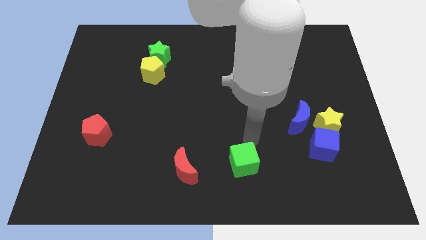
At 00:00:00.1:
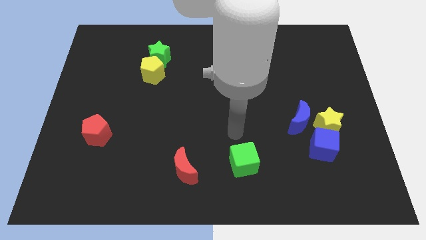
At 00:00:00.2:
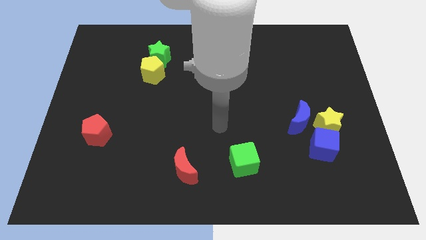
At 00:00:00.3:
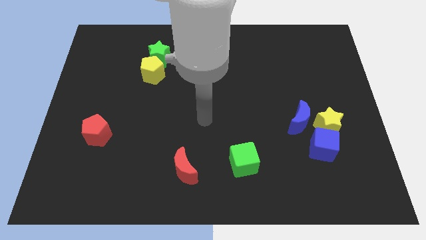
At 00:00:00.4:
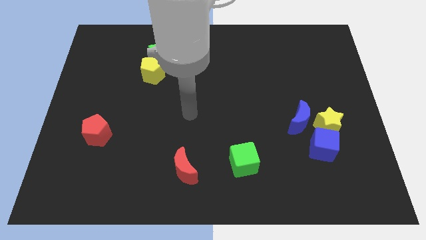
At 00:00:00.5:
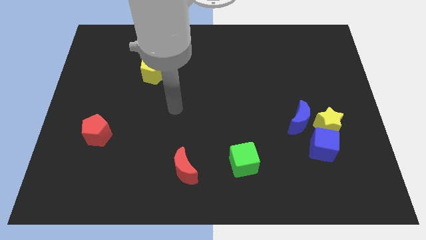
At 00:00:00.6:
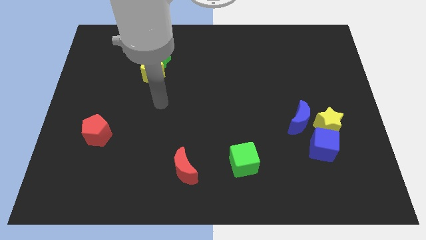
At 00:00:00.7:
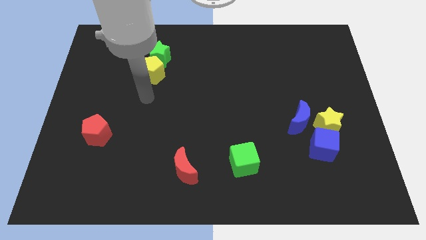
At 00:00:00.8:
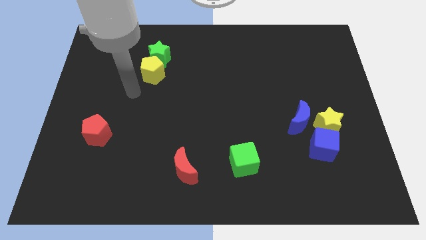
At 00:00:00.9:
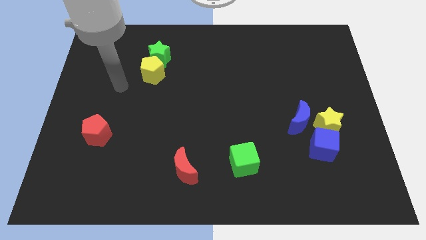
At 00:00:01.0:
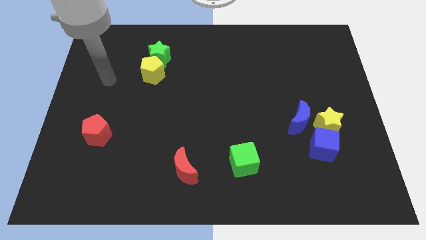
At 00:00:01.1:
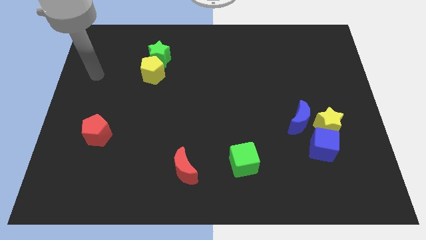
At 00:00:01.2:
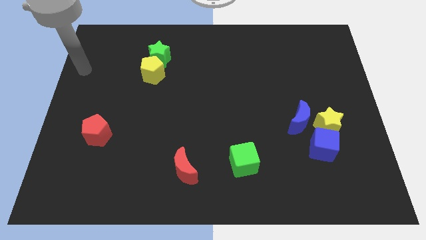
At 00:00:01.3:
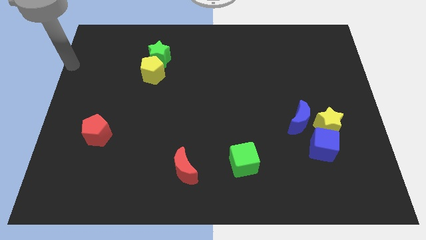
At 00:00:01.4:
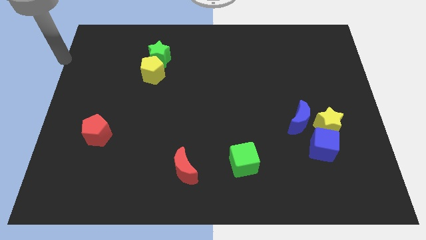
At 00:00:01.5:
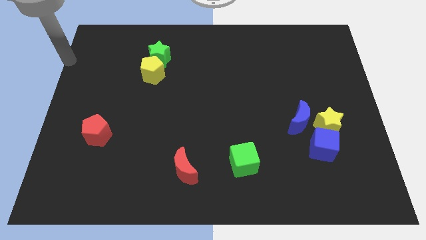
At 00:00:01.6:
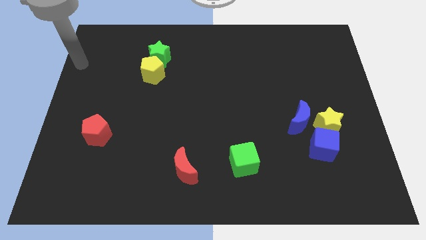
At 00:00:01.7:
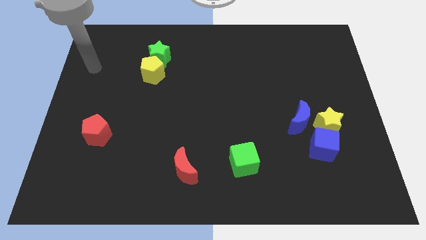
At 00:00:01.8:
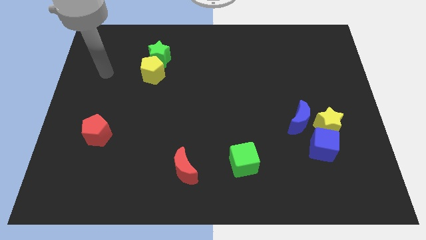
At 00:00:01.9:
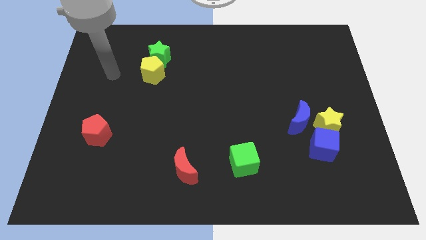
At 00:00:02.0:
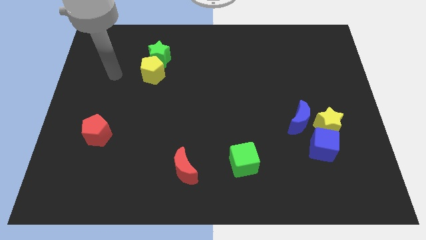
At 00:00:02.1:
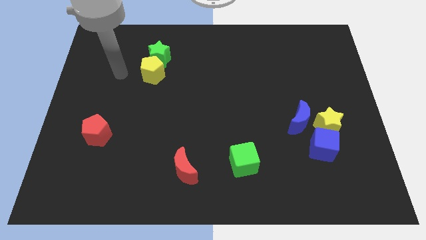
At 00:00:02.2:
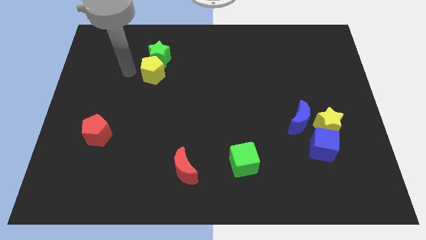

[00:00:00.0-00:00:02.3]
move your hand away from the green cube

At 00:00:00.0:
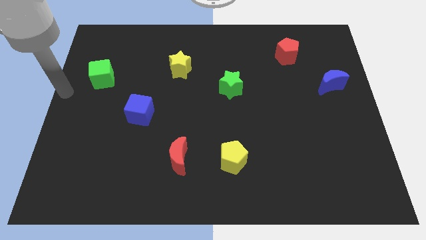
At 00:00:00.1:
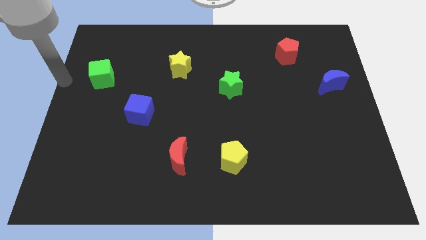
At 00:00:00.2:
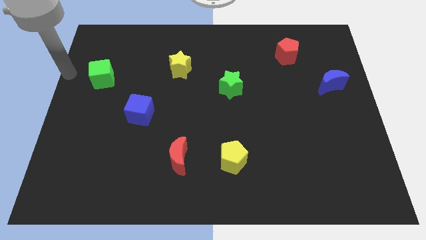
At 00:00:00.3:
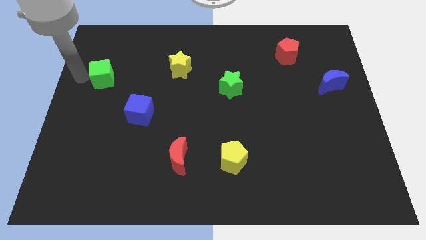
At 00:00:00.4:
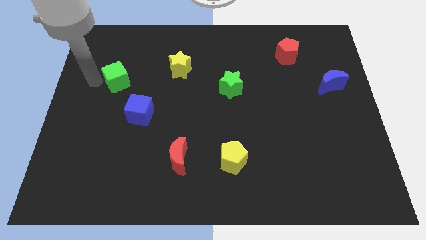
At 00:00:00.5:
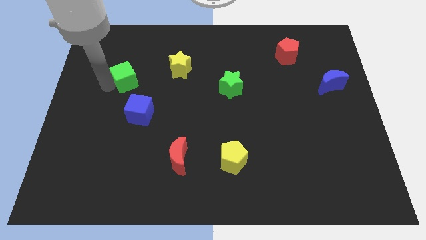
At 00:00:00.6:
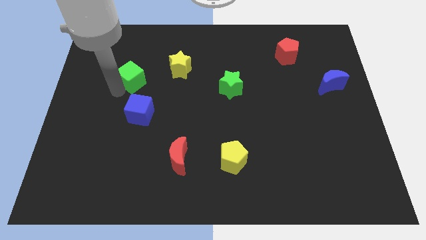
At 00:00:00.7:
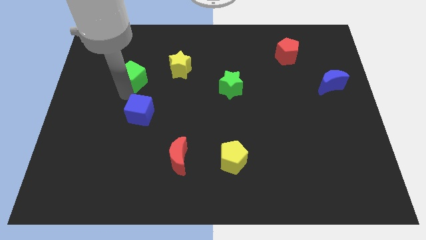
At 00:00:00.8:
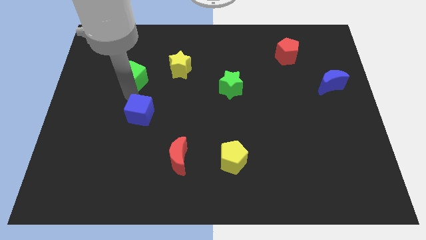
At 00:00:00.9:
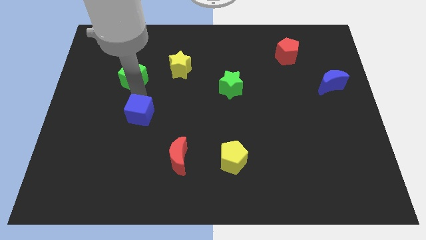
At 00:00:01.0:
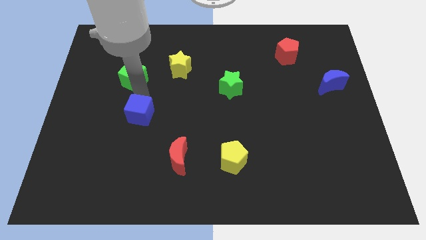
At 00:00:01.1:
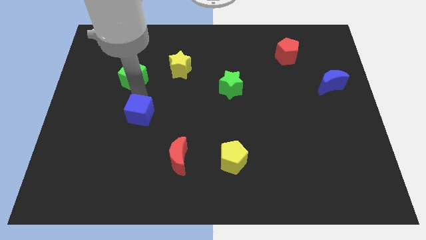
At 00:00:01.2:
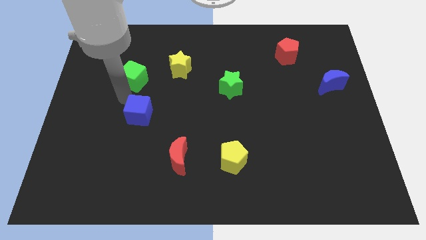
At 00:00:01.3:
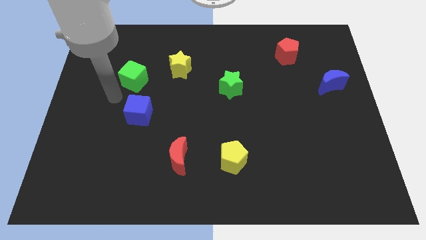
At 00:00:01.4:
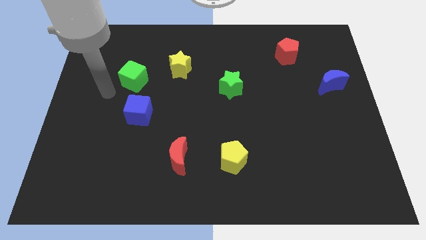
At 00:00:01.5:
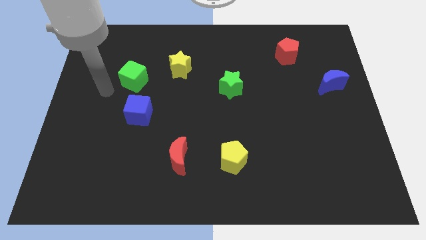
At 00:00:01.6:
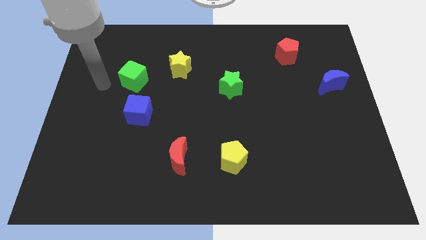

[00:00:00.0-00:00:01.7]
move the green cube towards yellow starr

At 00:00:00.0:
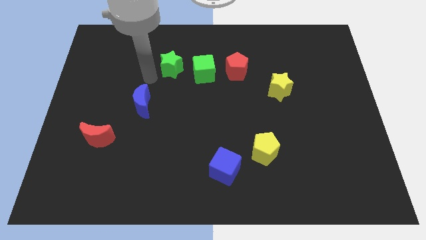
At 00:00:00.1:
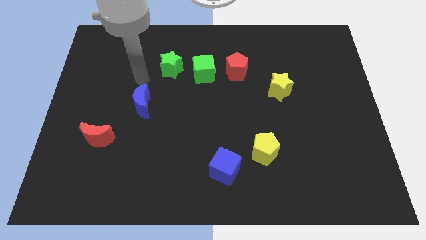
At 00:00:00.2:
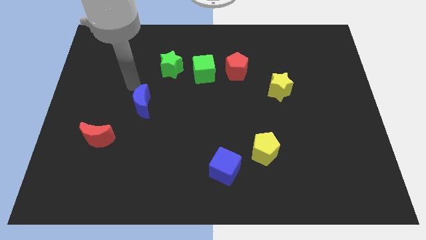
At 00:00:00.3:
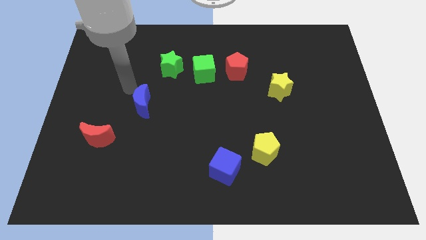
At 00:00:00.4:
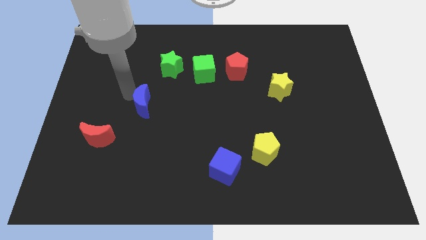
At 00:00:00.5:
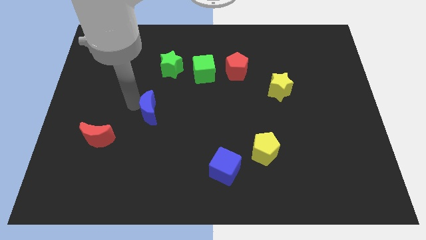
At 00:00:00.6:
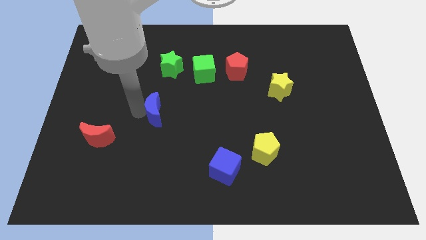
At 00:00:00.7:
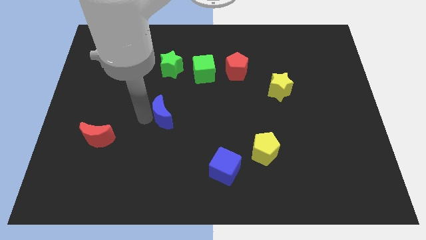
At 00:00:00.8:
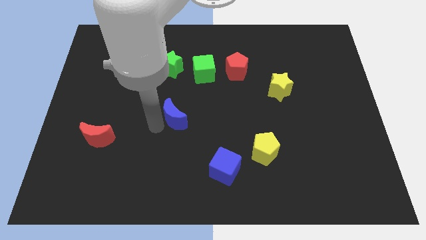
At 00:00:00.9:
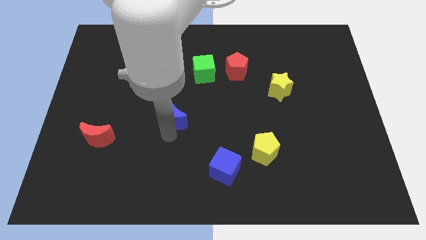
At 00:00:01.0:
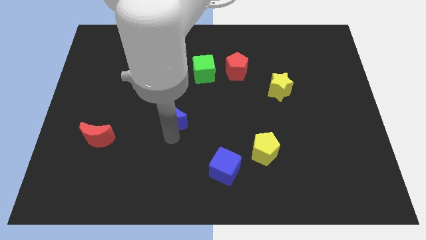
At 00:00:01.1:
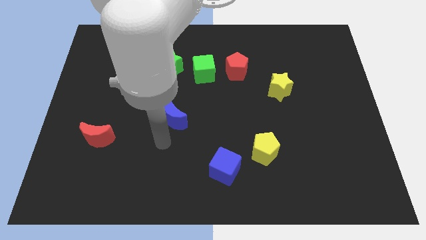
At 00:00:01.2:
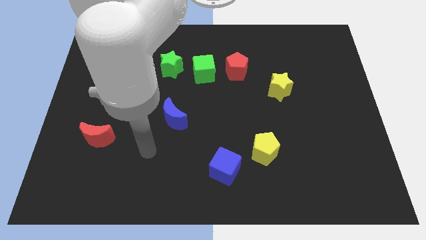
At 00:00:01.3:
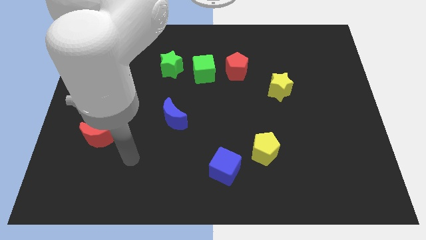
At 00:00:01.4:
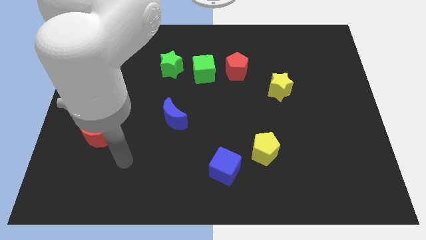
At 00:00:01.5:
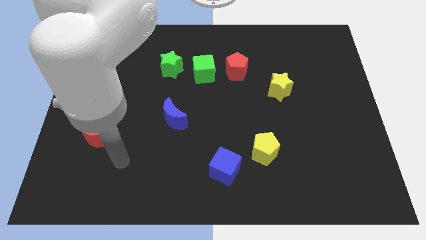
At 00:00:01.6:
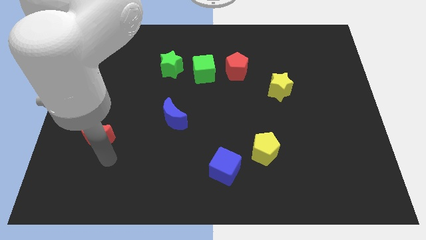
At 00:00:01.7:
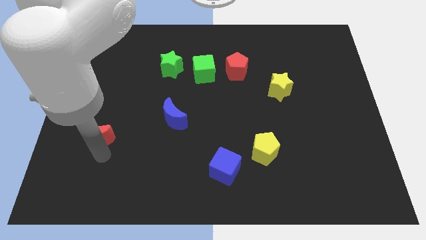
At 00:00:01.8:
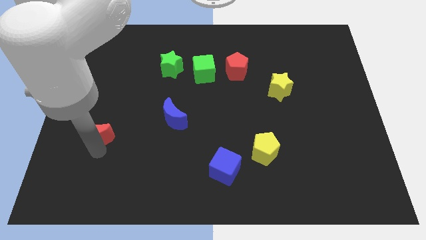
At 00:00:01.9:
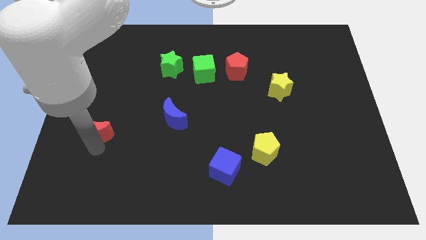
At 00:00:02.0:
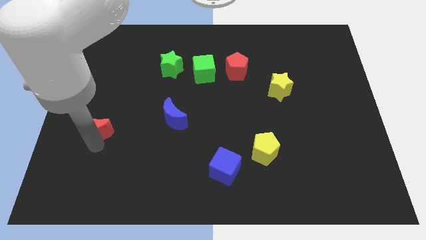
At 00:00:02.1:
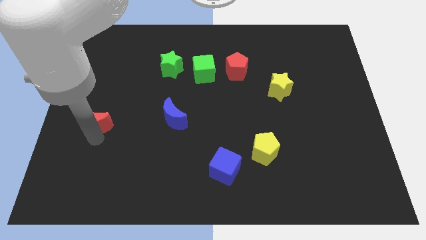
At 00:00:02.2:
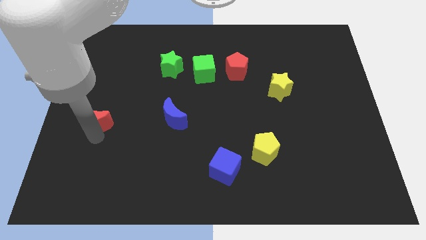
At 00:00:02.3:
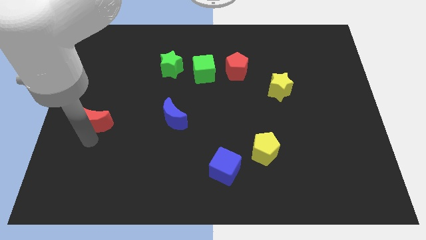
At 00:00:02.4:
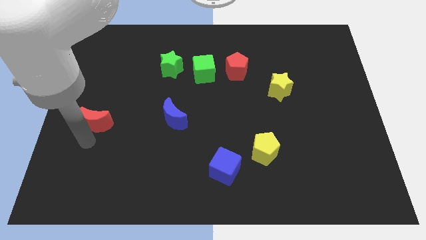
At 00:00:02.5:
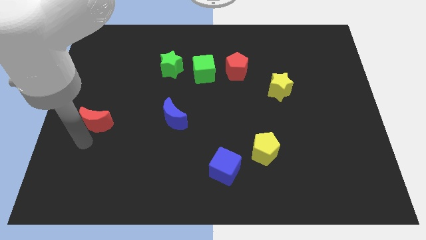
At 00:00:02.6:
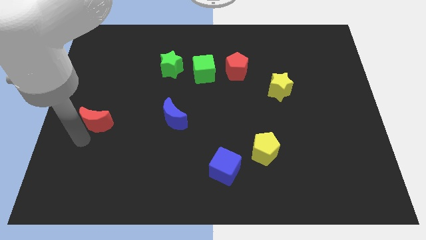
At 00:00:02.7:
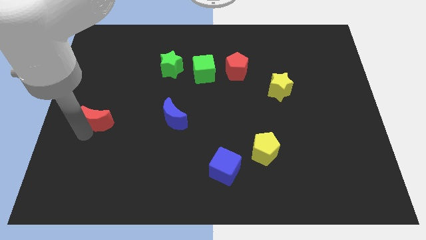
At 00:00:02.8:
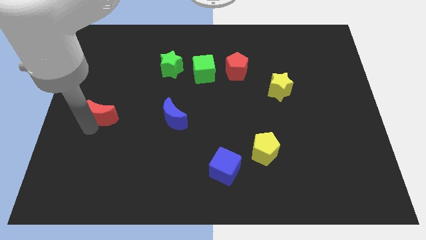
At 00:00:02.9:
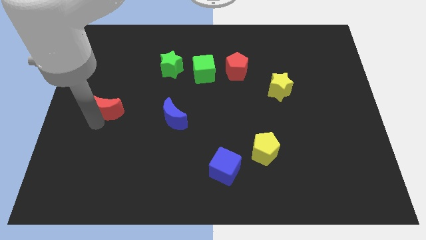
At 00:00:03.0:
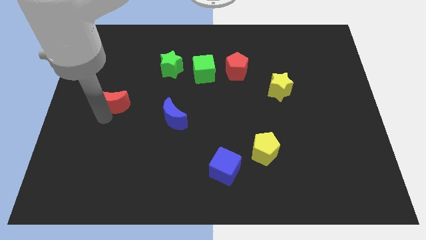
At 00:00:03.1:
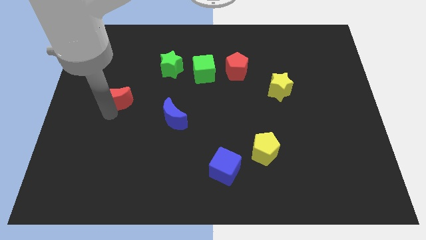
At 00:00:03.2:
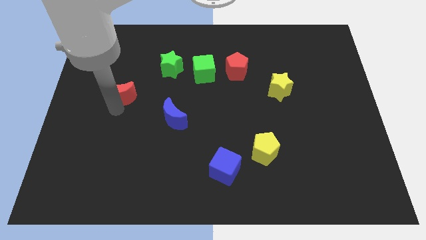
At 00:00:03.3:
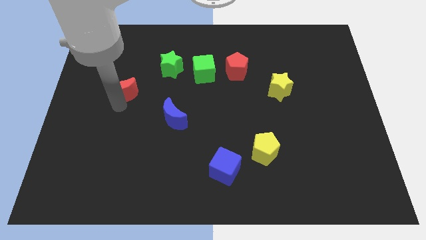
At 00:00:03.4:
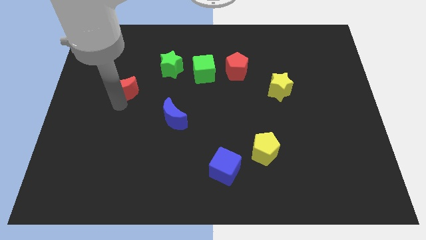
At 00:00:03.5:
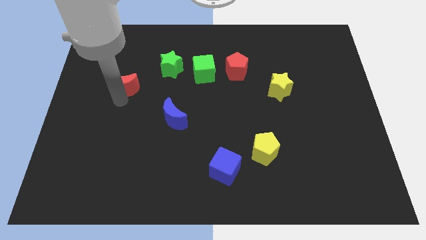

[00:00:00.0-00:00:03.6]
move red crescent towards top

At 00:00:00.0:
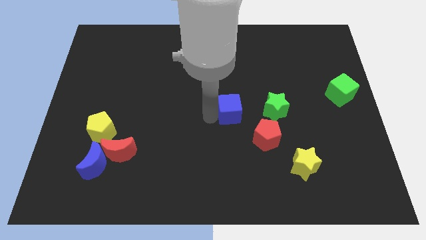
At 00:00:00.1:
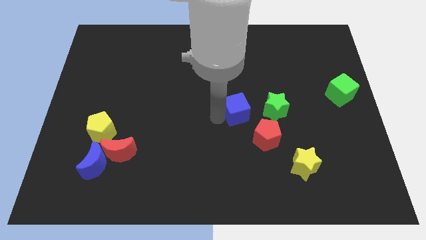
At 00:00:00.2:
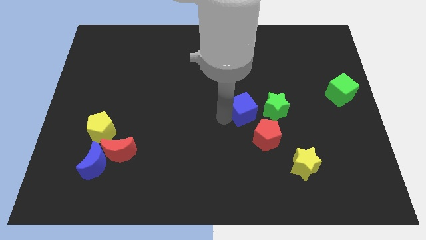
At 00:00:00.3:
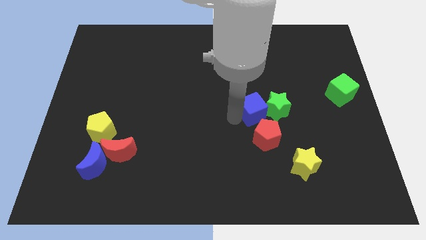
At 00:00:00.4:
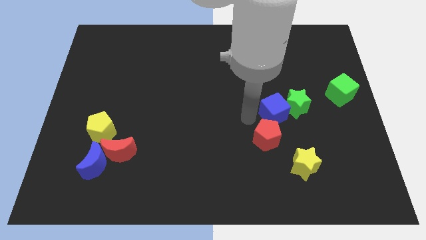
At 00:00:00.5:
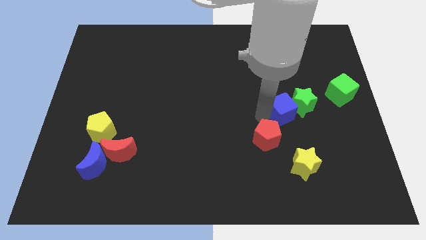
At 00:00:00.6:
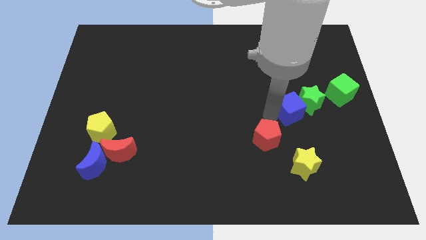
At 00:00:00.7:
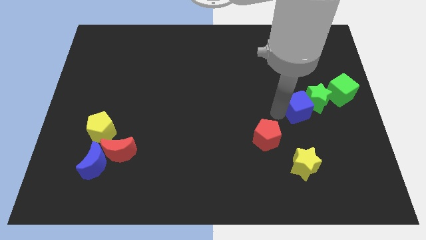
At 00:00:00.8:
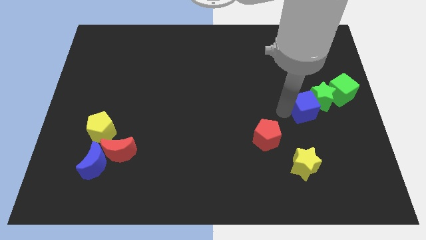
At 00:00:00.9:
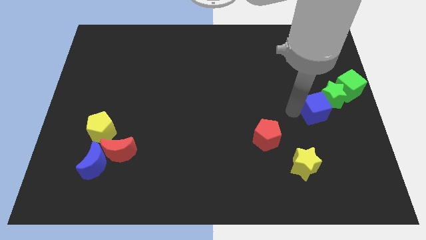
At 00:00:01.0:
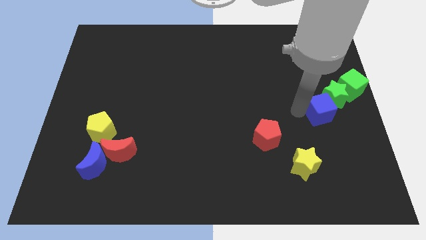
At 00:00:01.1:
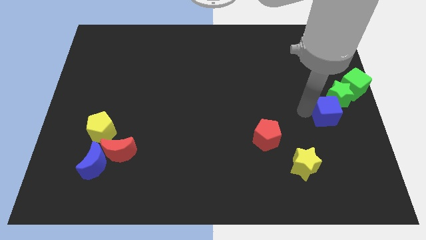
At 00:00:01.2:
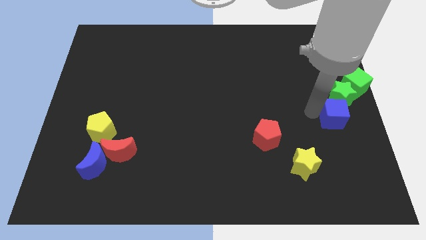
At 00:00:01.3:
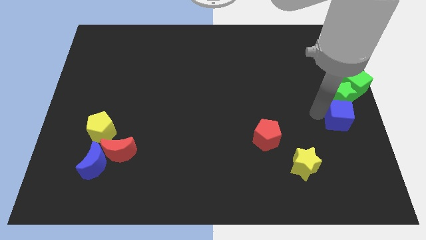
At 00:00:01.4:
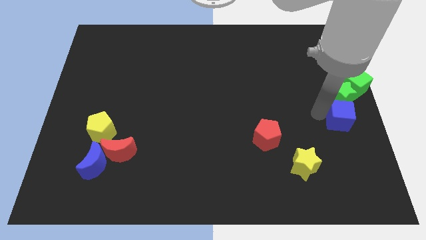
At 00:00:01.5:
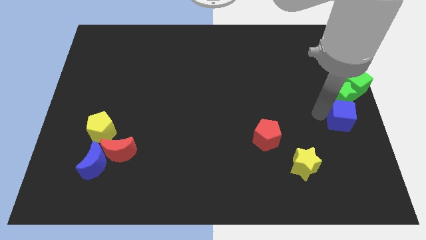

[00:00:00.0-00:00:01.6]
slide blue cube to the bottom of green star
